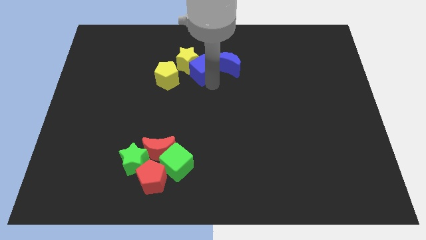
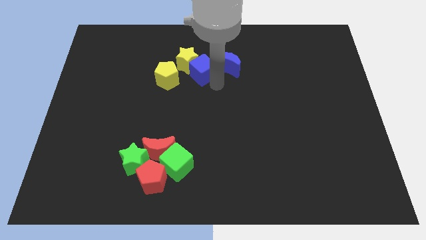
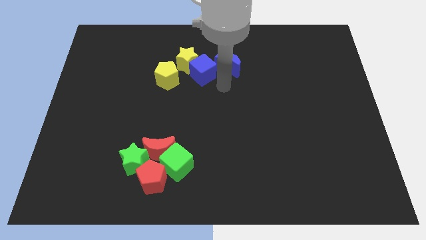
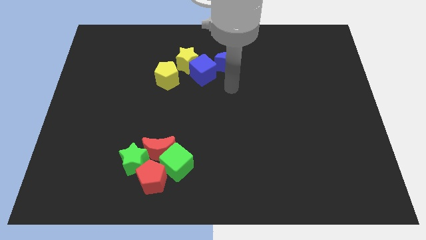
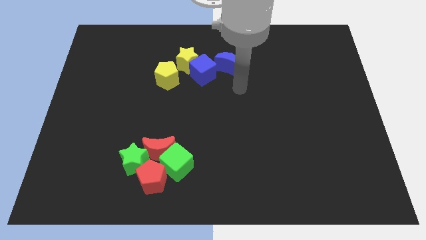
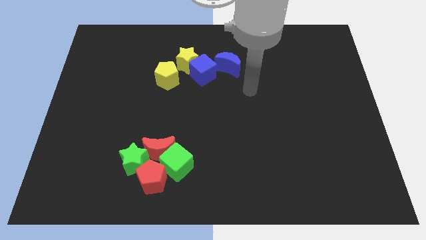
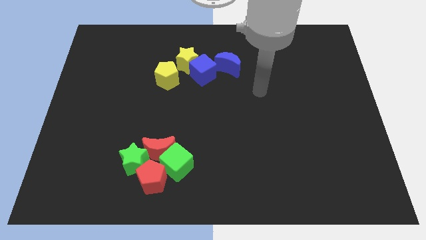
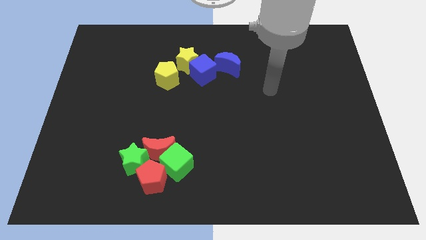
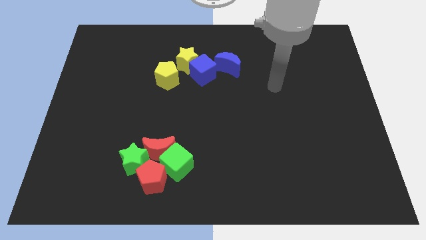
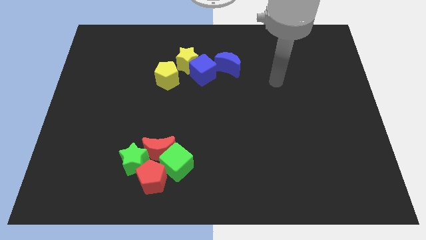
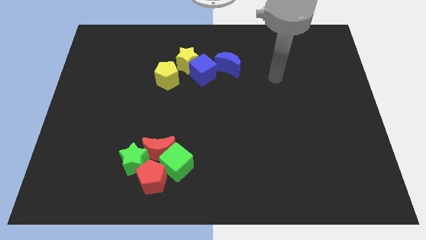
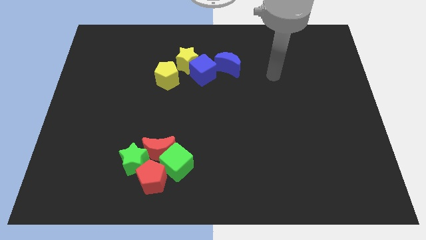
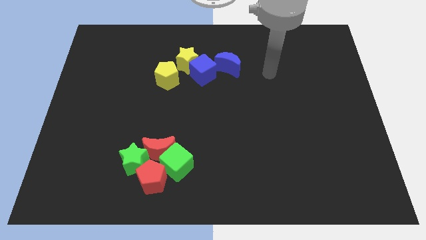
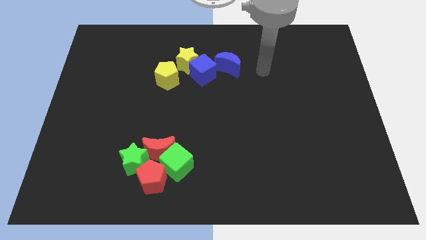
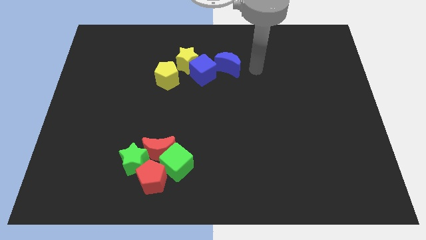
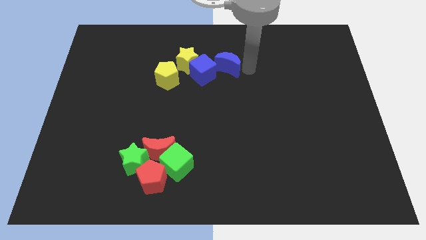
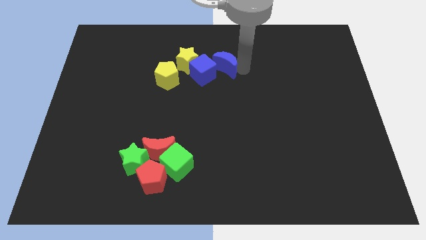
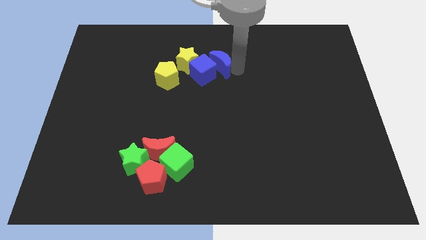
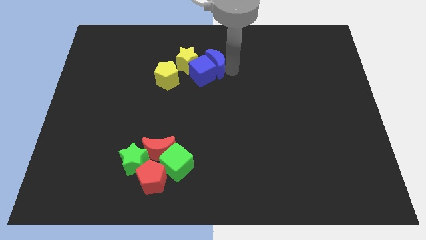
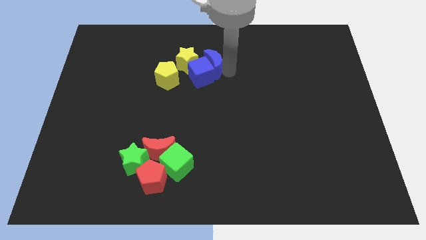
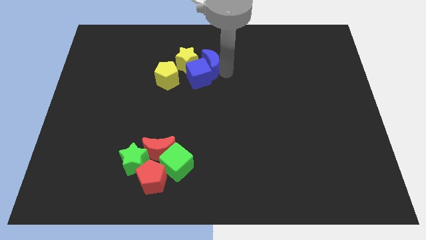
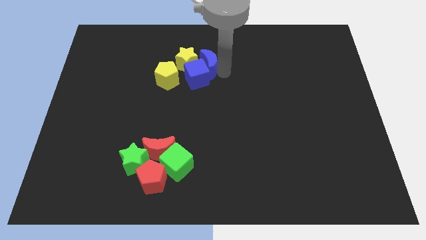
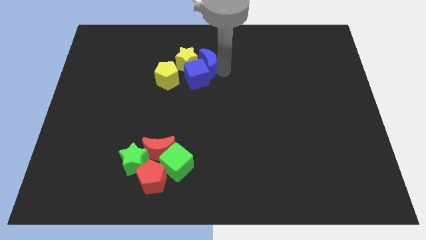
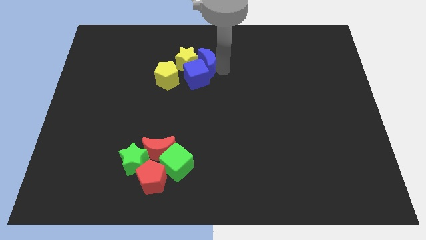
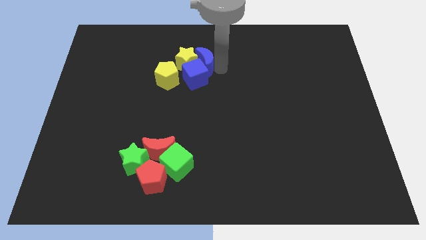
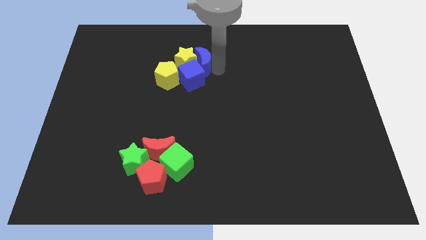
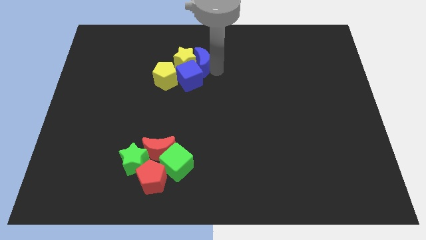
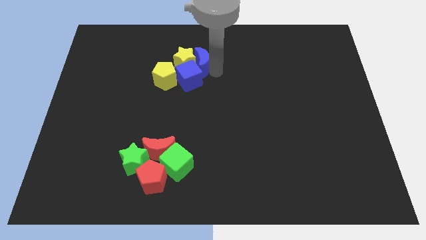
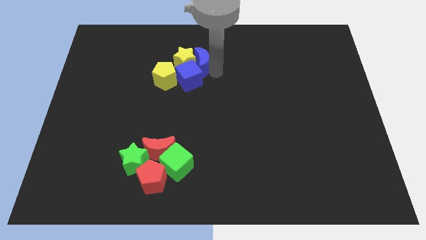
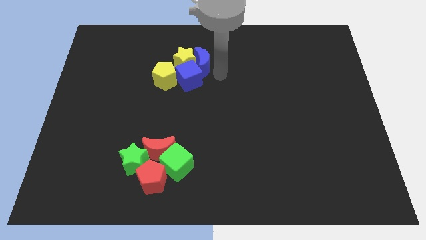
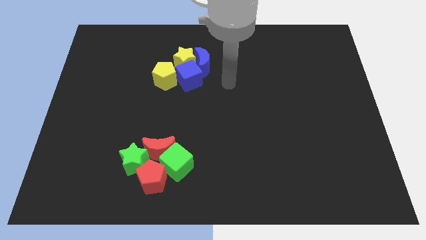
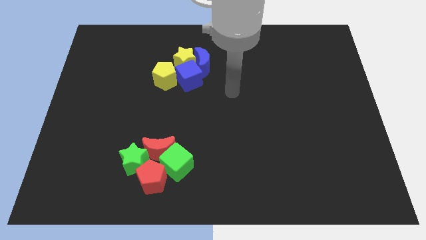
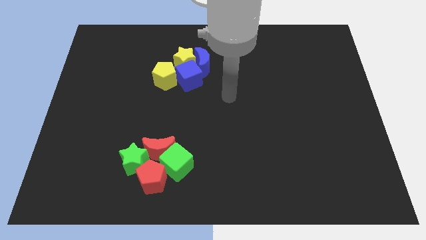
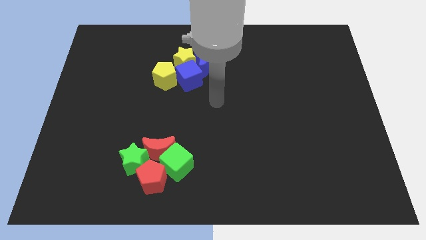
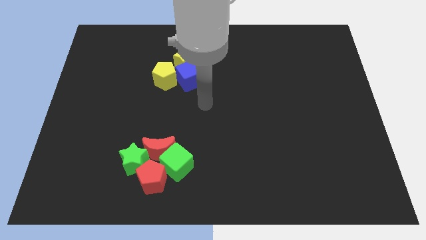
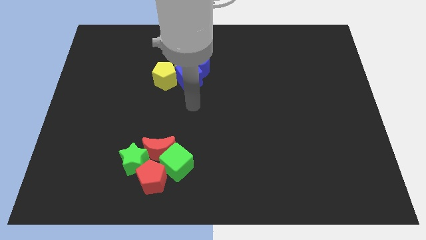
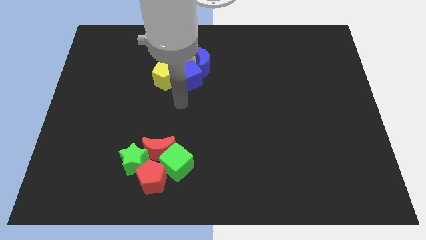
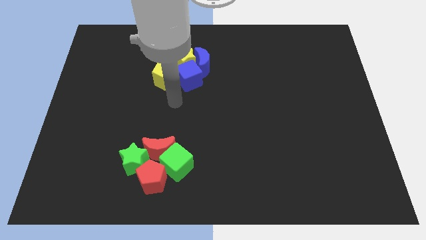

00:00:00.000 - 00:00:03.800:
move blue crescent into blue cube

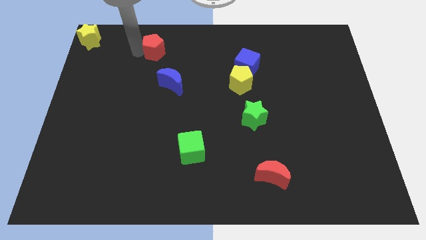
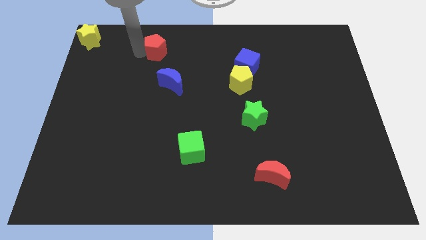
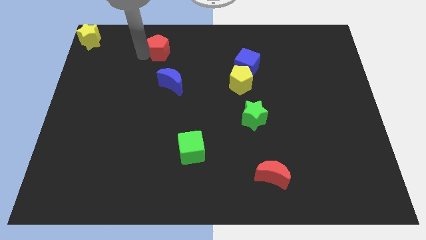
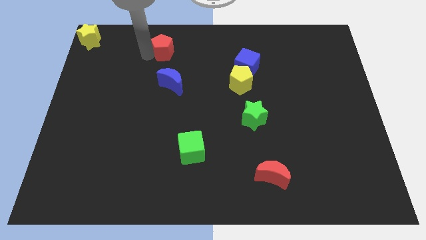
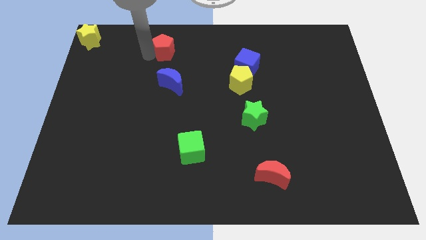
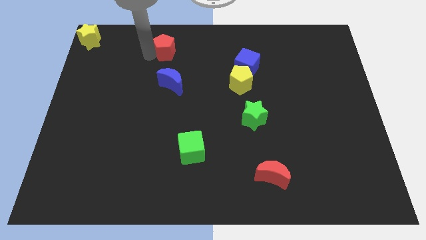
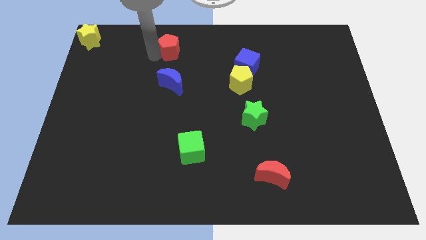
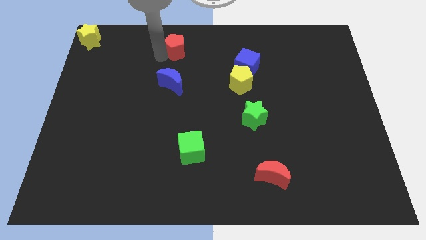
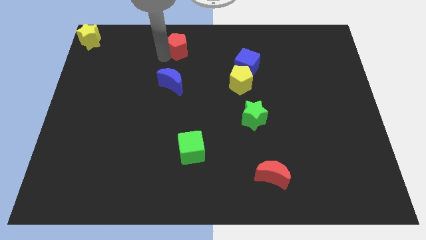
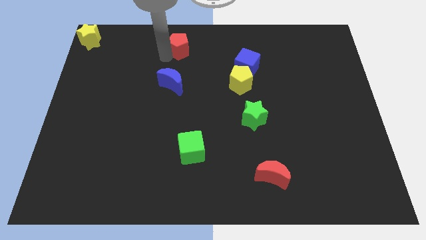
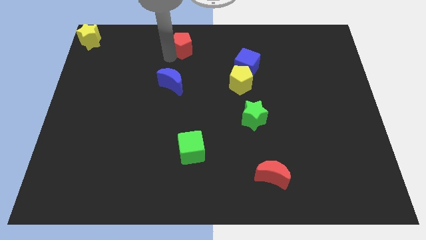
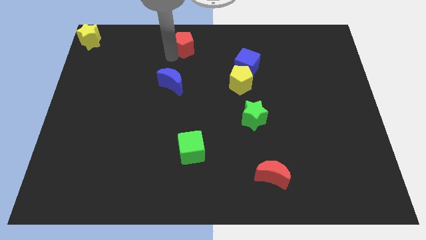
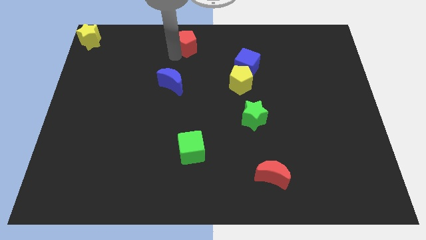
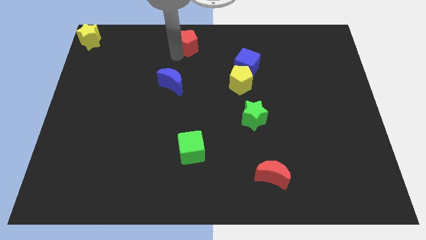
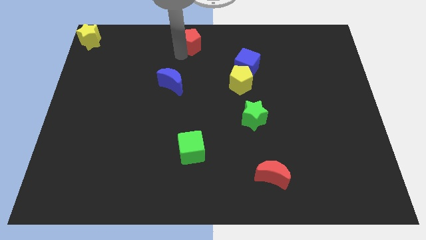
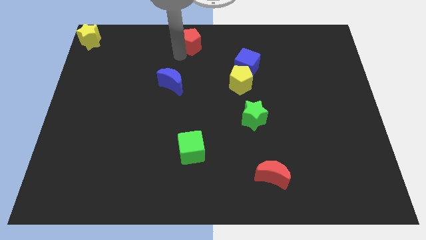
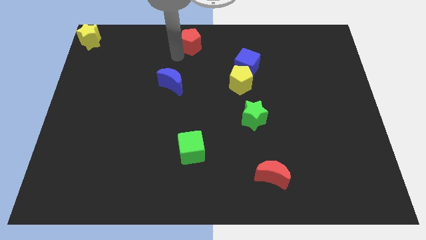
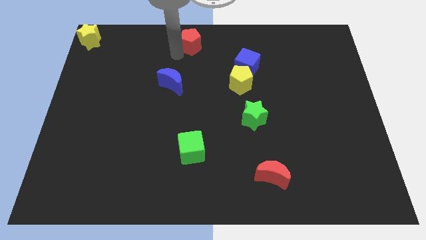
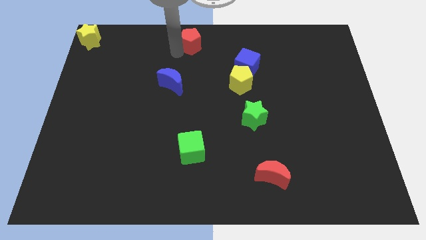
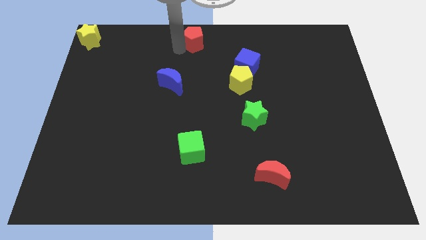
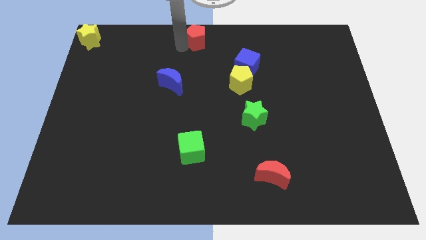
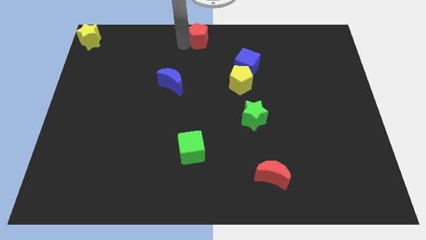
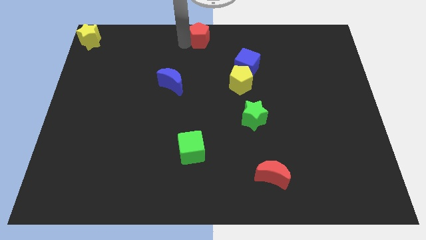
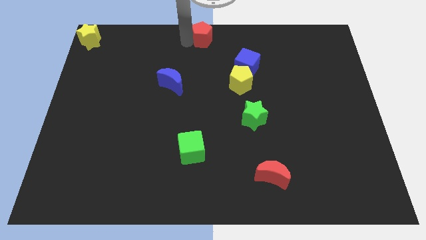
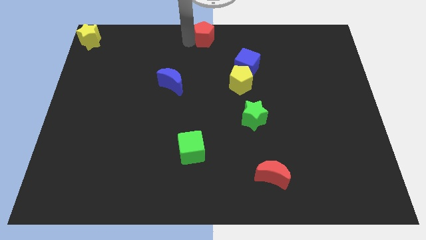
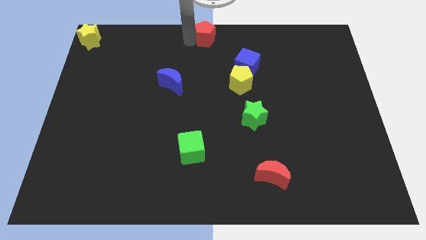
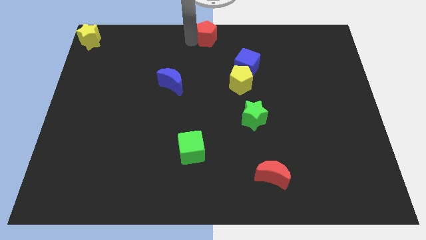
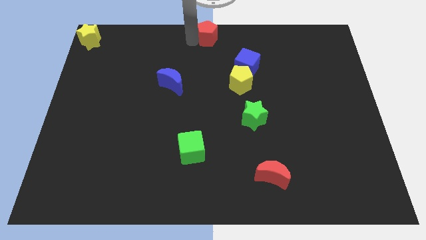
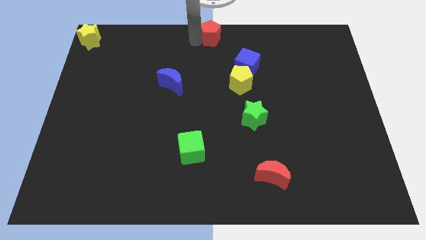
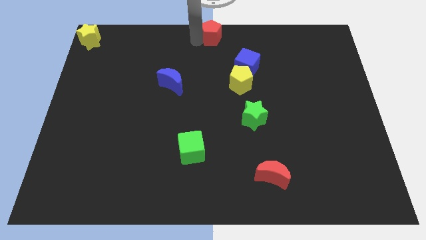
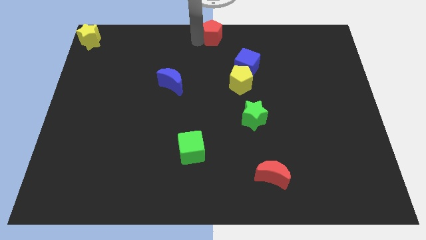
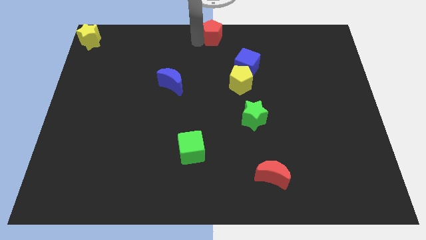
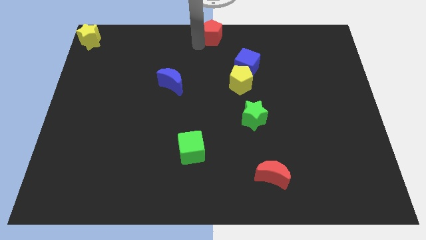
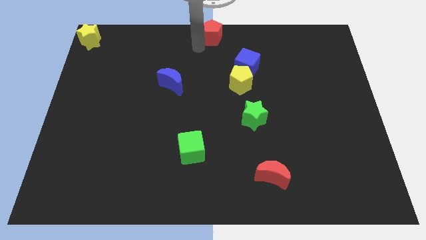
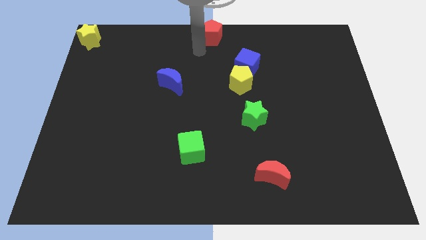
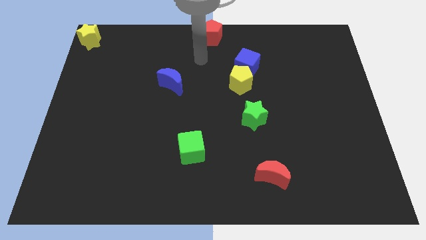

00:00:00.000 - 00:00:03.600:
place red pentagon on the top center of the board

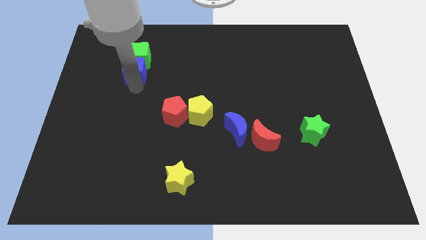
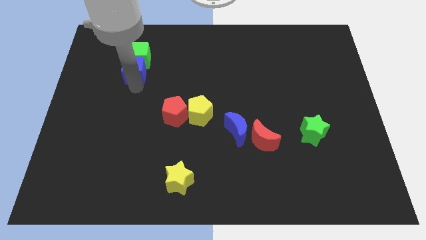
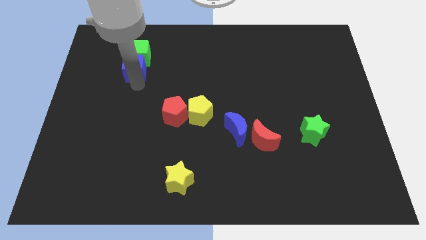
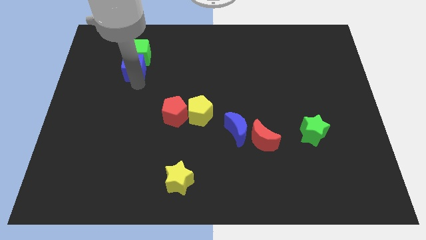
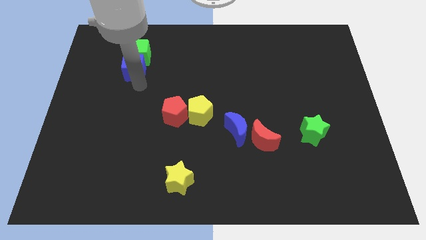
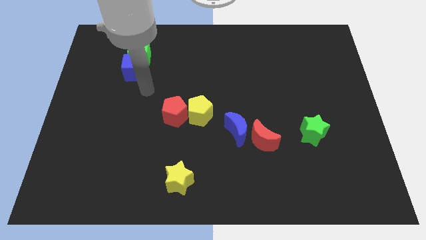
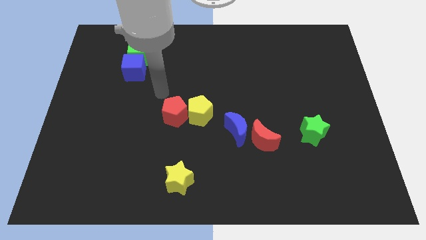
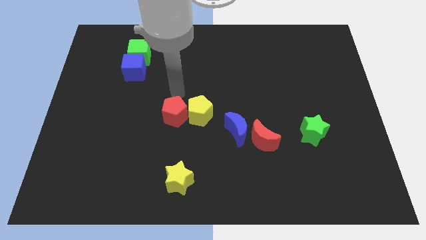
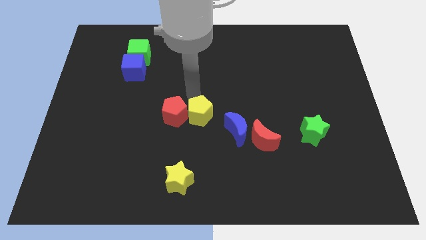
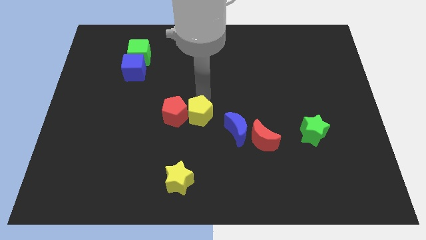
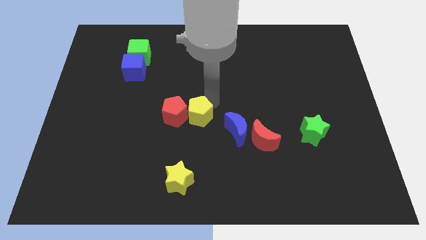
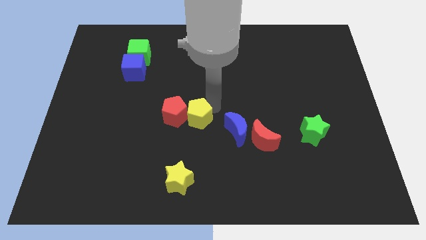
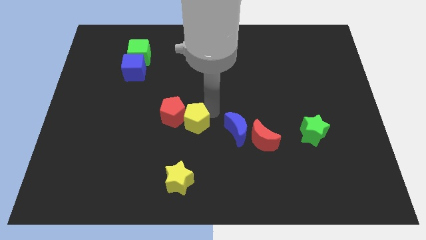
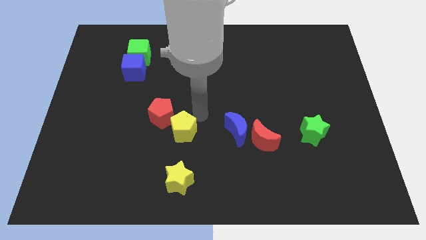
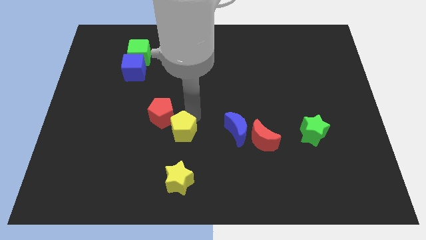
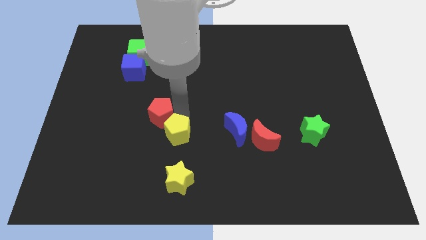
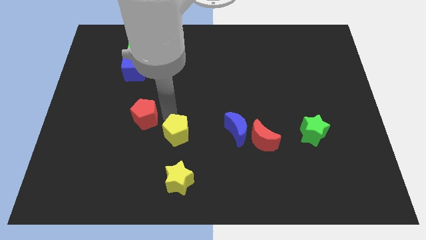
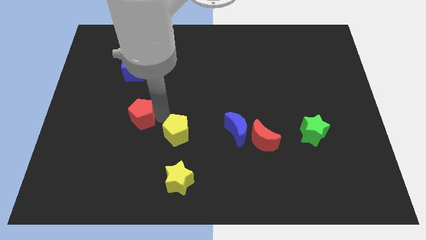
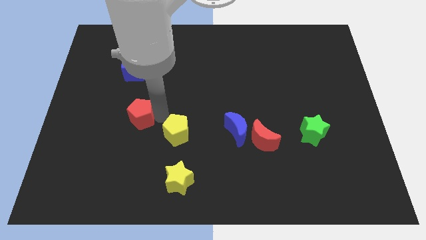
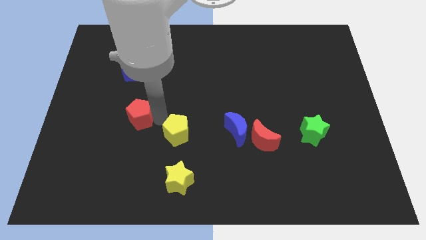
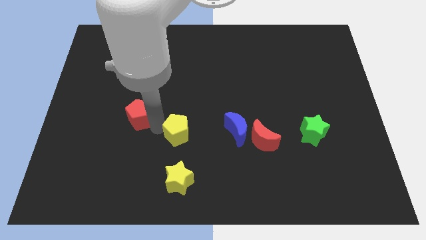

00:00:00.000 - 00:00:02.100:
separate the yellow pentagon and red pentagon
